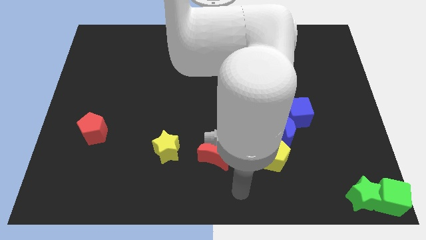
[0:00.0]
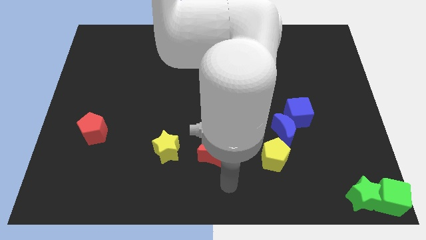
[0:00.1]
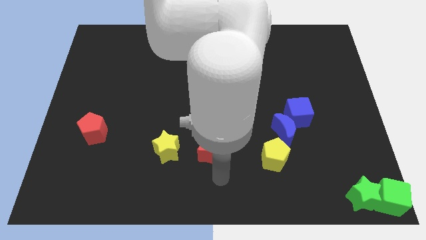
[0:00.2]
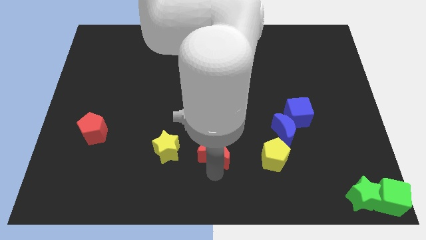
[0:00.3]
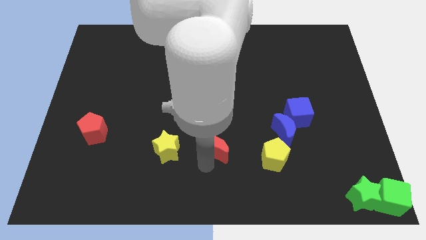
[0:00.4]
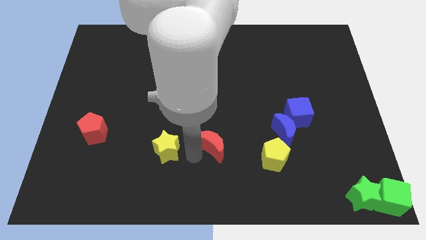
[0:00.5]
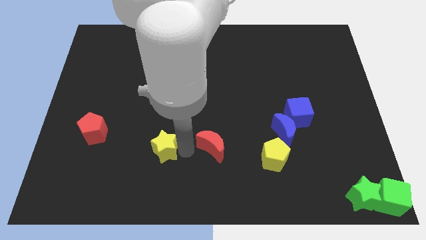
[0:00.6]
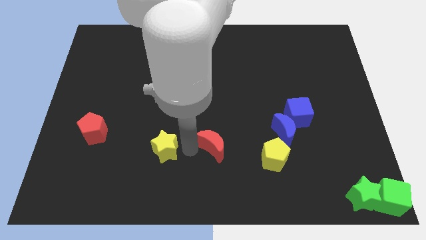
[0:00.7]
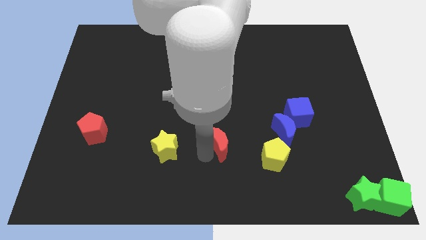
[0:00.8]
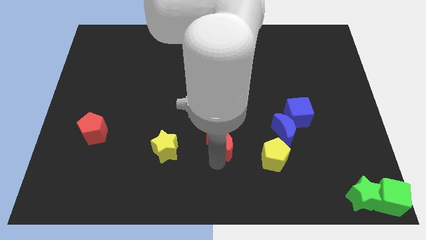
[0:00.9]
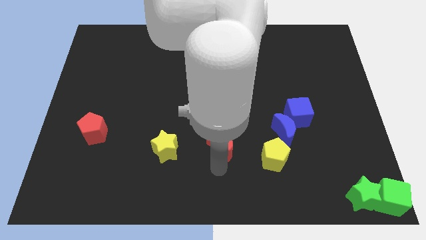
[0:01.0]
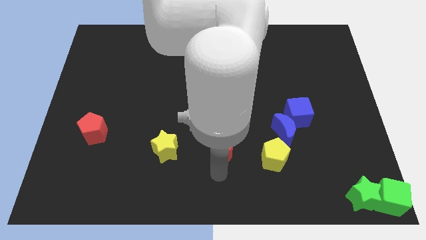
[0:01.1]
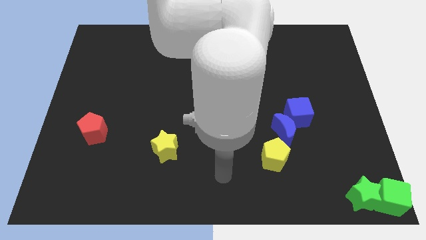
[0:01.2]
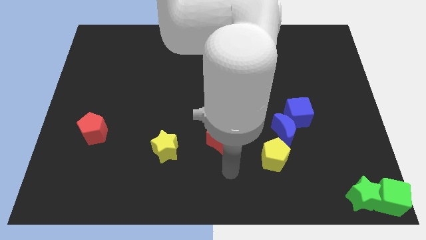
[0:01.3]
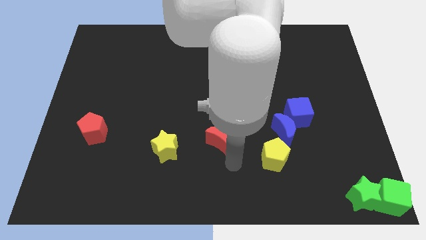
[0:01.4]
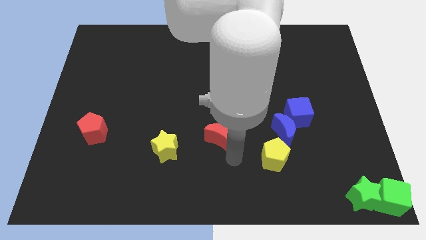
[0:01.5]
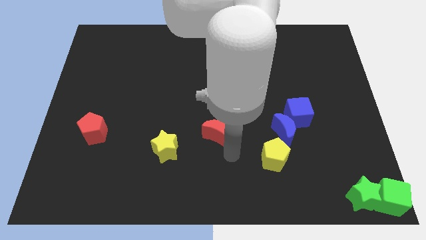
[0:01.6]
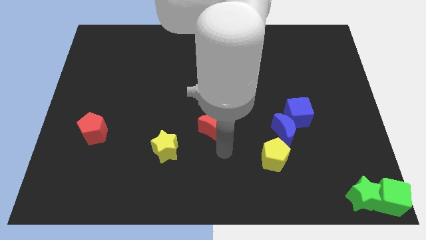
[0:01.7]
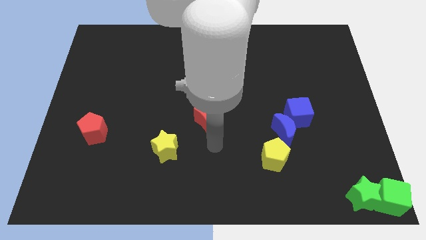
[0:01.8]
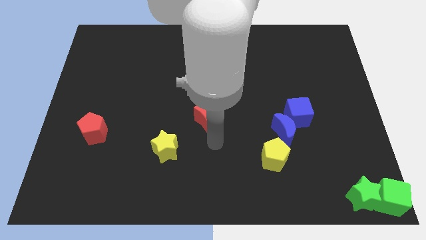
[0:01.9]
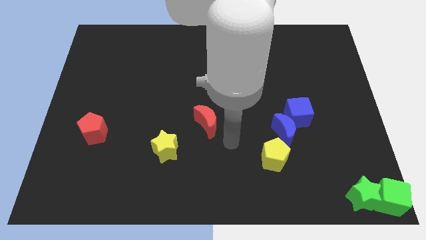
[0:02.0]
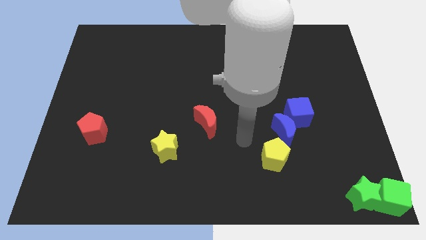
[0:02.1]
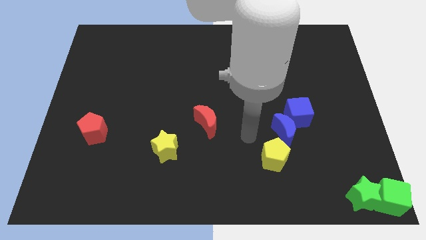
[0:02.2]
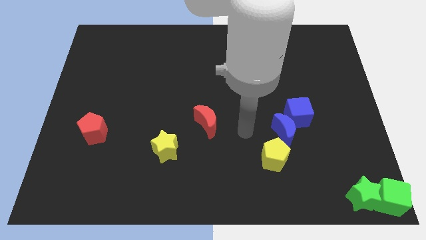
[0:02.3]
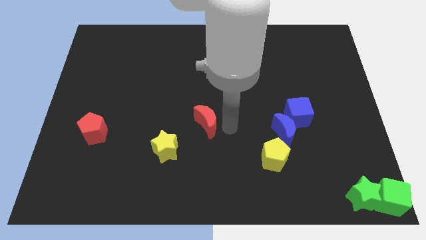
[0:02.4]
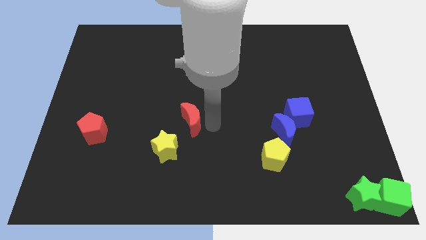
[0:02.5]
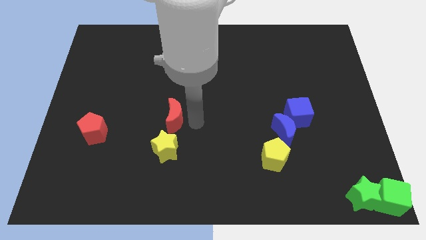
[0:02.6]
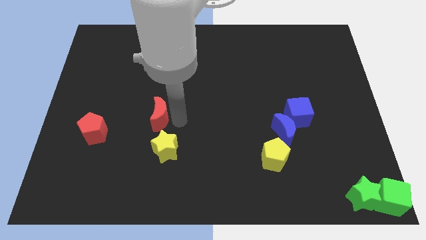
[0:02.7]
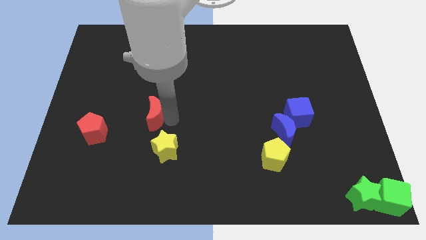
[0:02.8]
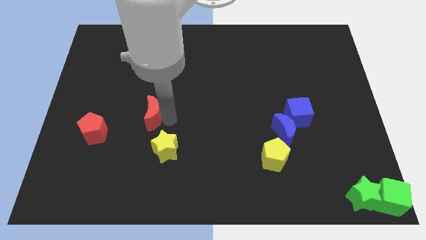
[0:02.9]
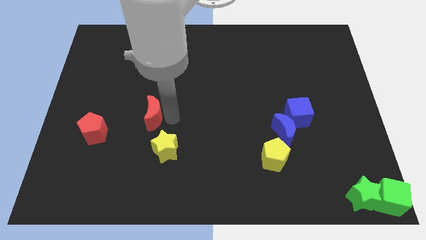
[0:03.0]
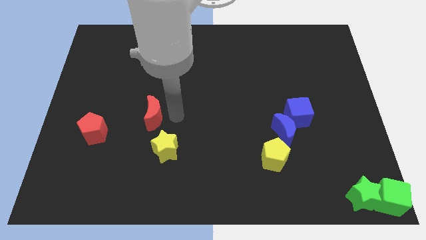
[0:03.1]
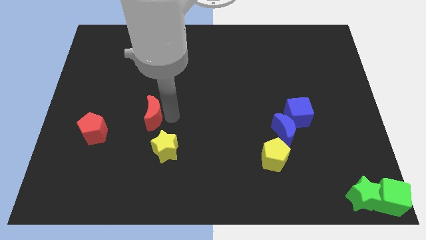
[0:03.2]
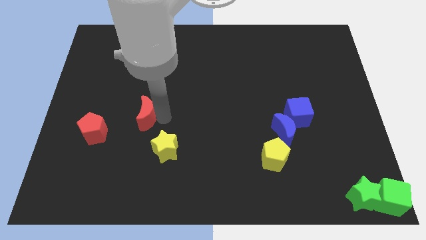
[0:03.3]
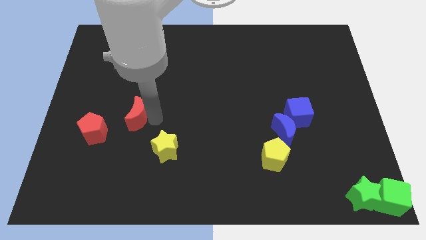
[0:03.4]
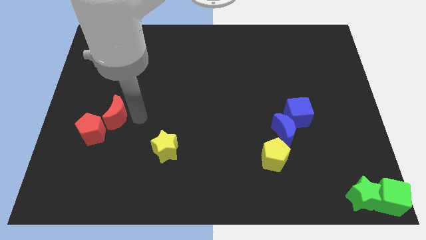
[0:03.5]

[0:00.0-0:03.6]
move the red crescent towards the top of the red pentagon

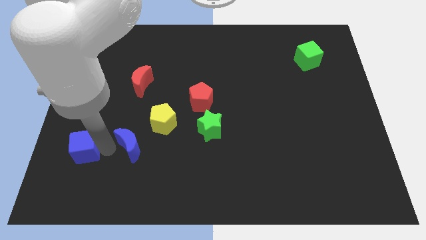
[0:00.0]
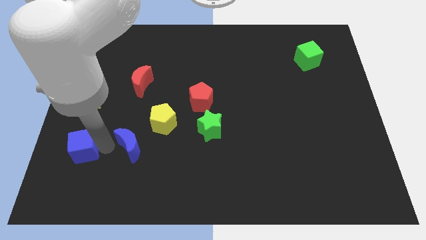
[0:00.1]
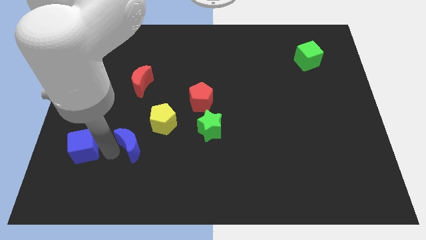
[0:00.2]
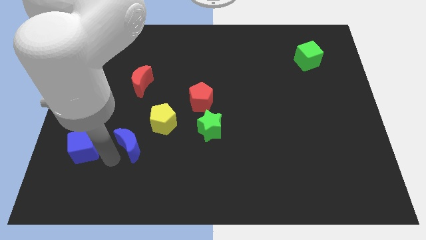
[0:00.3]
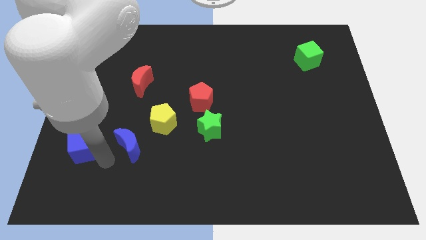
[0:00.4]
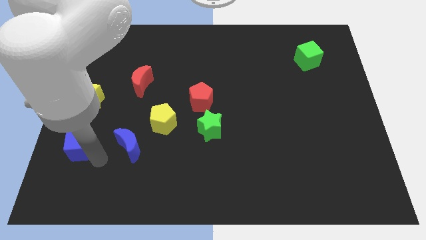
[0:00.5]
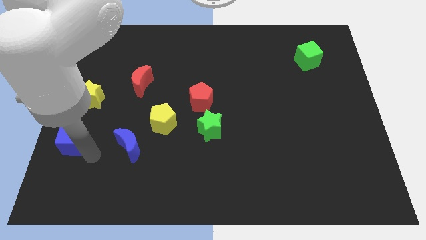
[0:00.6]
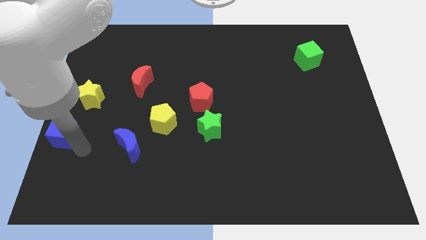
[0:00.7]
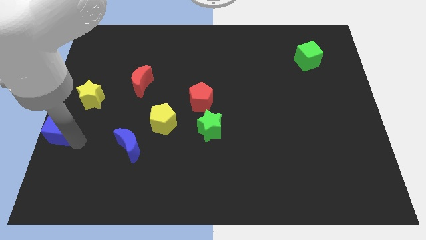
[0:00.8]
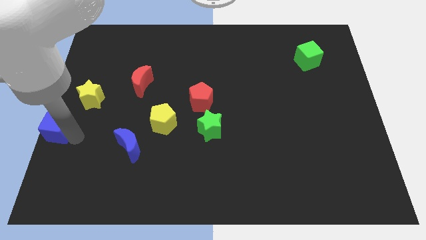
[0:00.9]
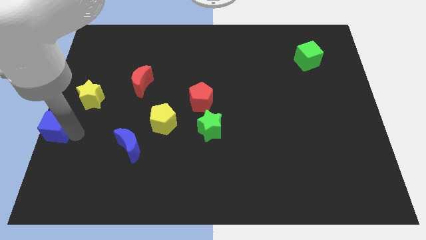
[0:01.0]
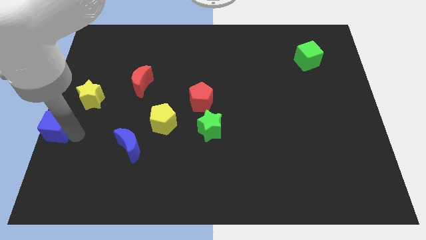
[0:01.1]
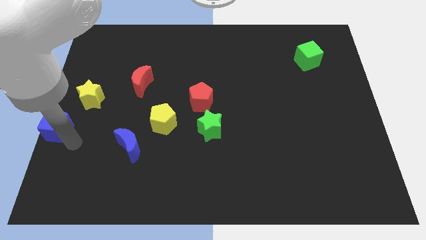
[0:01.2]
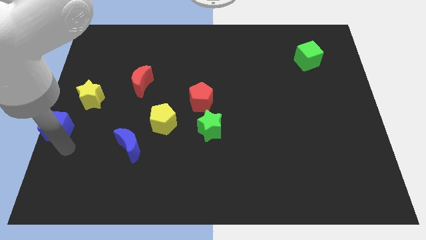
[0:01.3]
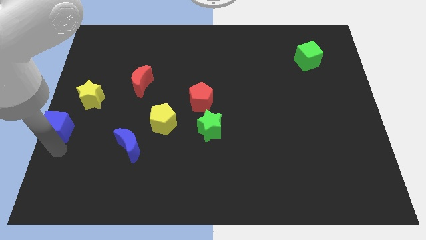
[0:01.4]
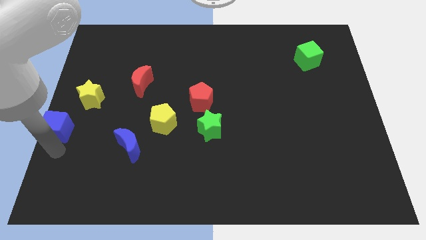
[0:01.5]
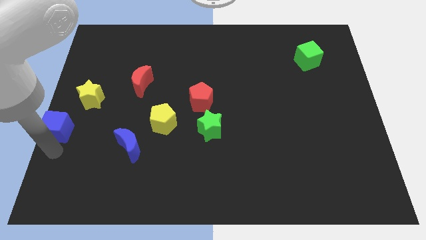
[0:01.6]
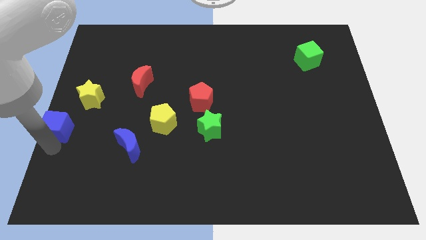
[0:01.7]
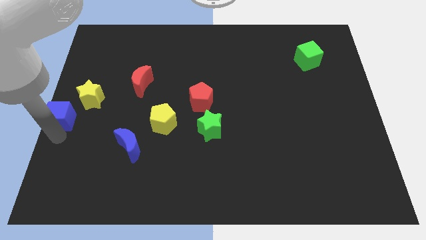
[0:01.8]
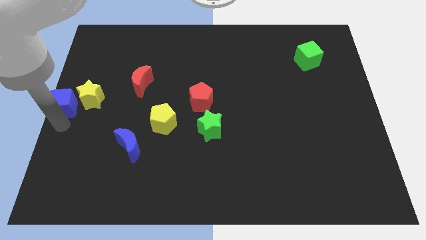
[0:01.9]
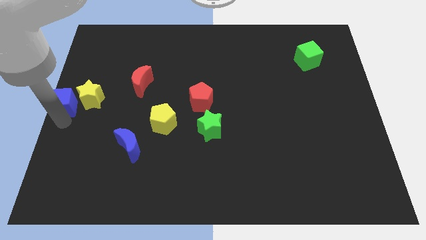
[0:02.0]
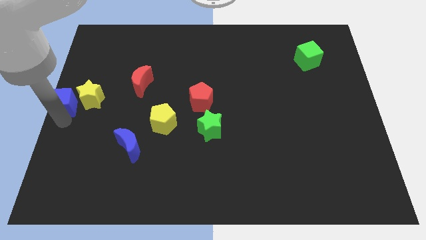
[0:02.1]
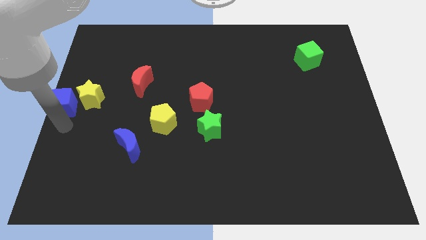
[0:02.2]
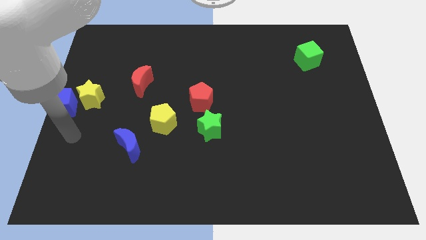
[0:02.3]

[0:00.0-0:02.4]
slide the blue moon to the left center of the board

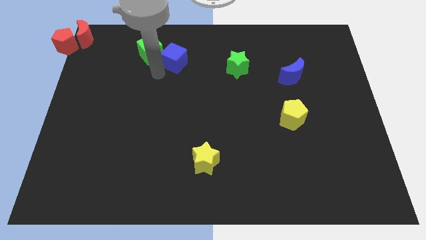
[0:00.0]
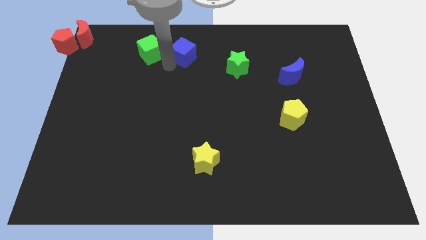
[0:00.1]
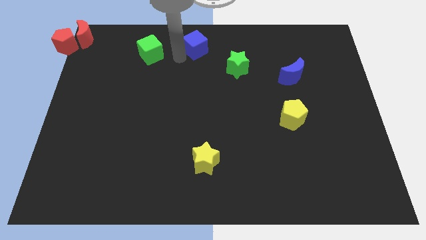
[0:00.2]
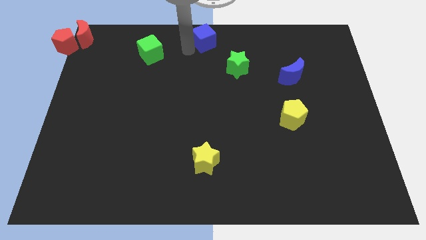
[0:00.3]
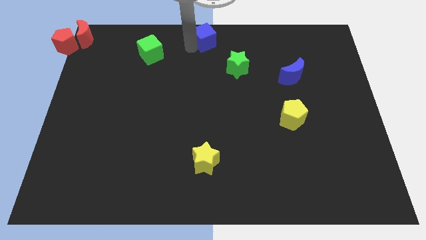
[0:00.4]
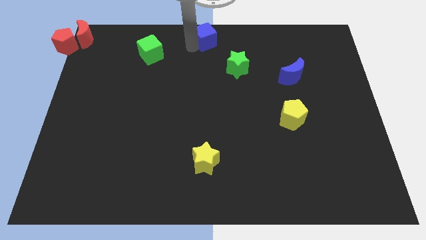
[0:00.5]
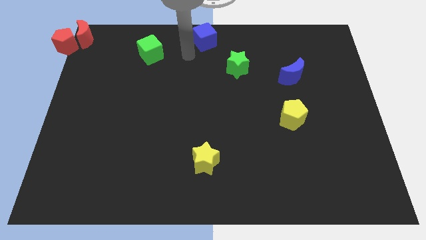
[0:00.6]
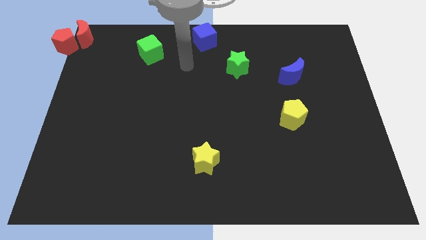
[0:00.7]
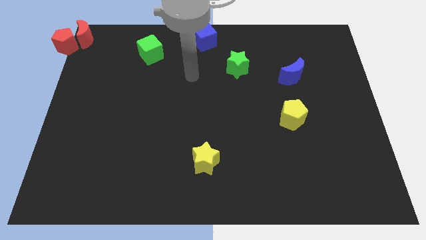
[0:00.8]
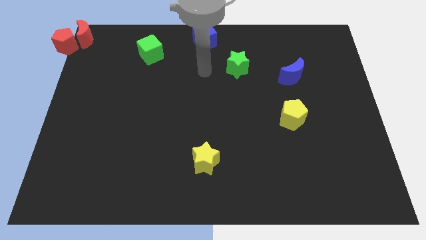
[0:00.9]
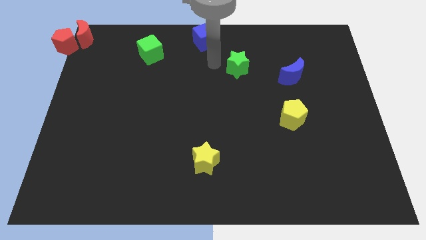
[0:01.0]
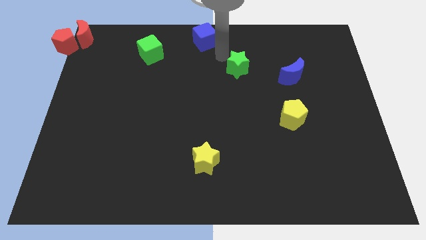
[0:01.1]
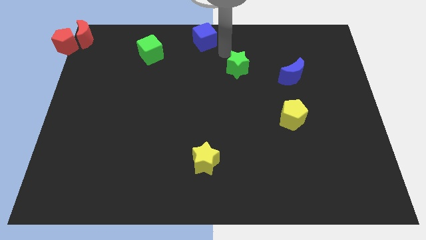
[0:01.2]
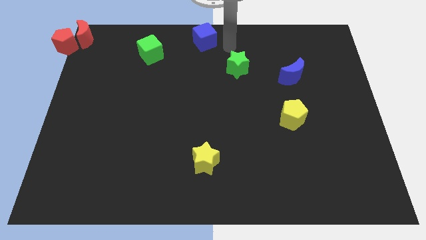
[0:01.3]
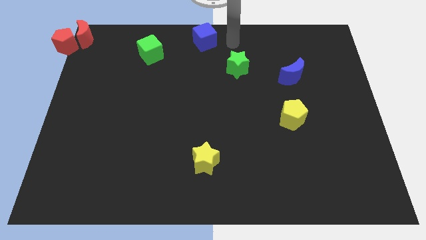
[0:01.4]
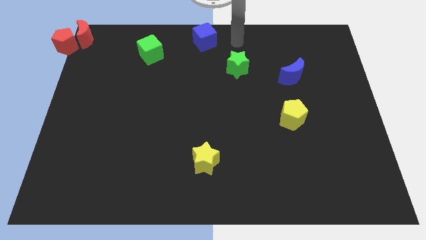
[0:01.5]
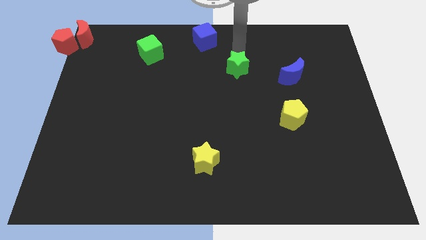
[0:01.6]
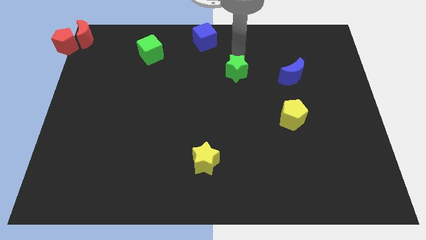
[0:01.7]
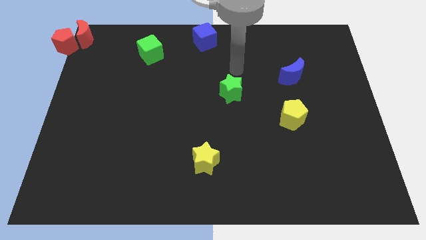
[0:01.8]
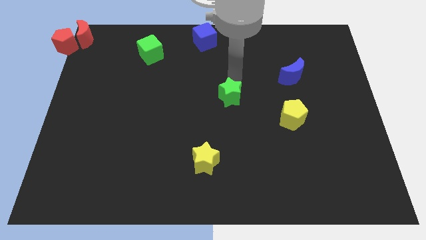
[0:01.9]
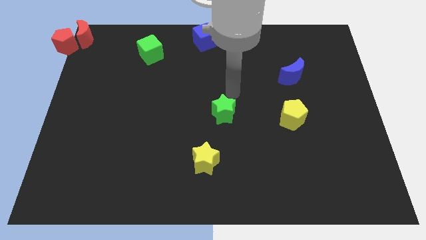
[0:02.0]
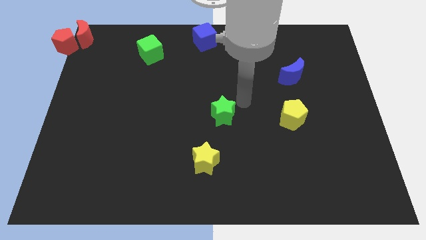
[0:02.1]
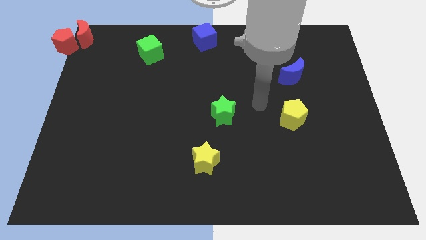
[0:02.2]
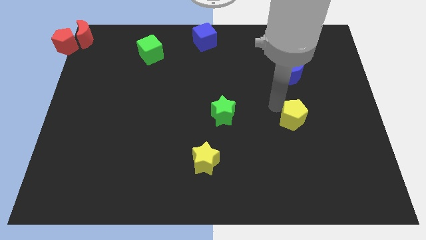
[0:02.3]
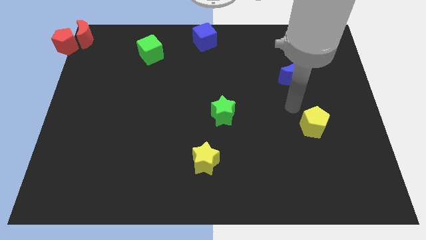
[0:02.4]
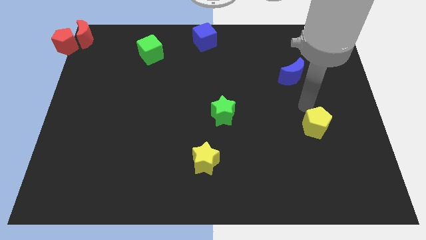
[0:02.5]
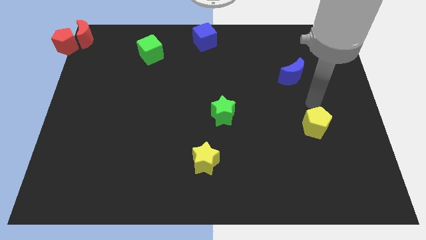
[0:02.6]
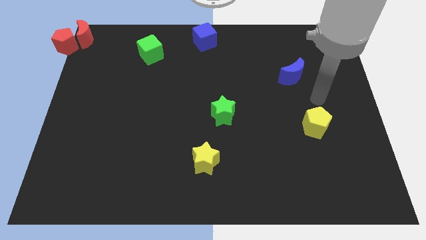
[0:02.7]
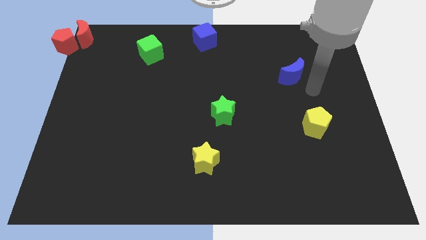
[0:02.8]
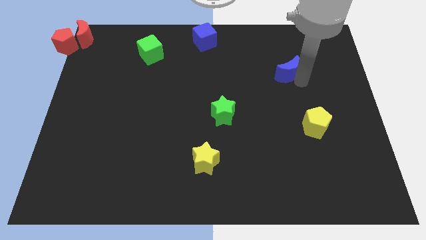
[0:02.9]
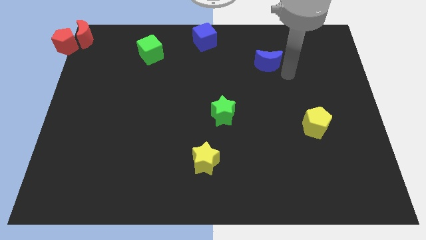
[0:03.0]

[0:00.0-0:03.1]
make a triangle out of green star yellow pentagon and the blue moon
